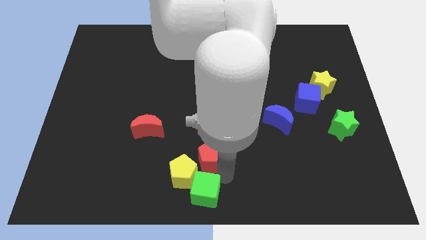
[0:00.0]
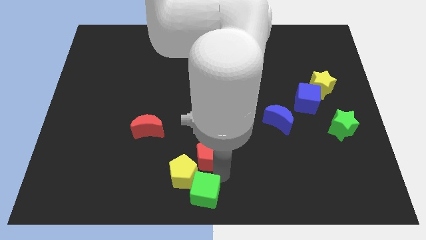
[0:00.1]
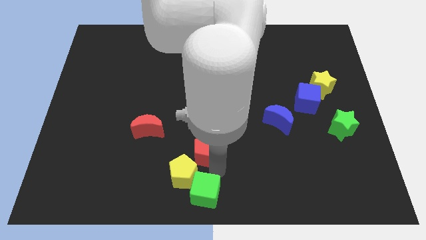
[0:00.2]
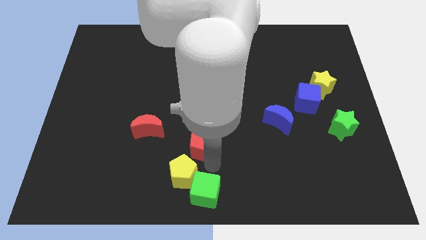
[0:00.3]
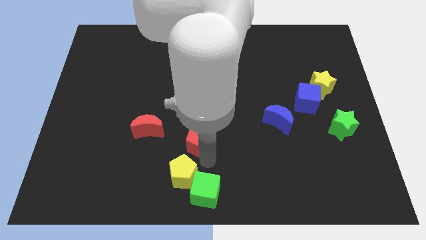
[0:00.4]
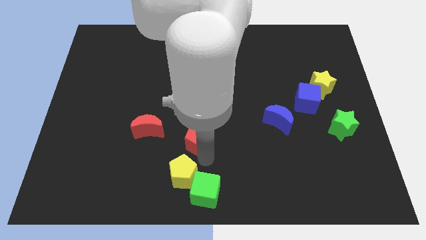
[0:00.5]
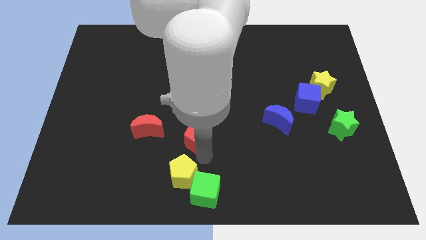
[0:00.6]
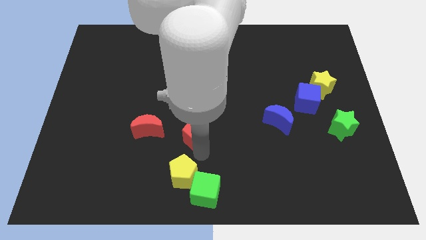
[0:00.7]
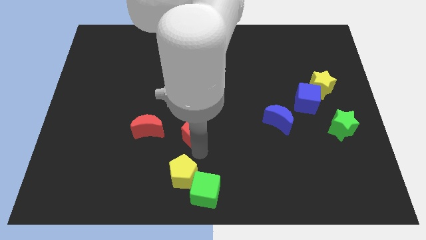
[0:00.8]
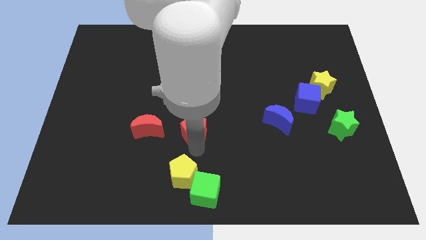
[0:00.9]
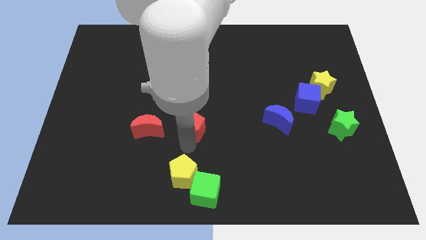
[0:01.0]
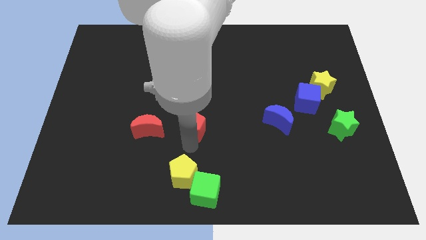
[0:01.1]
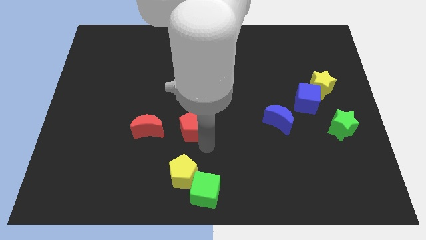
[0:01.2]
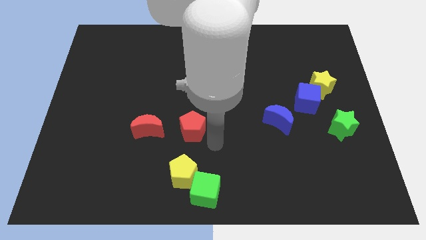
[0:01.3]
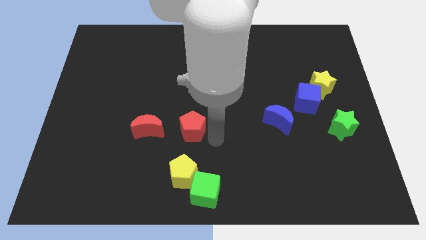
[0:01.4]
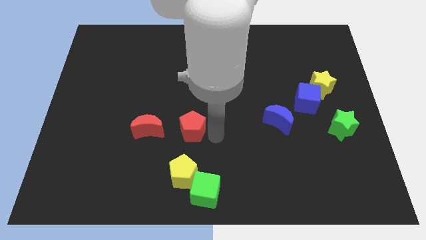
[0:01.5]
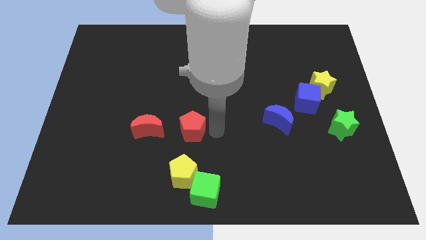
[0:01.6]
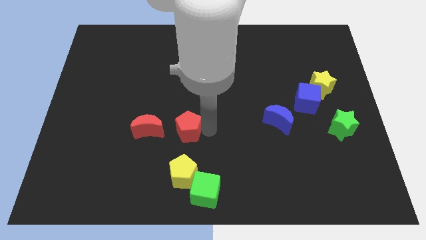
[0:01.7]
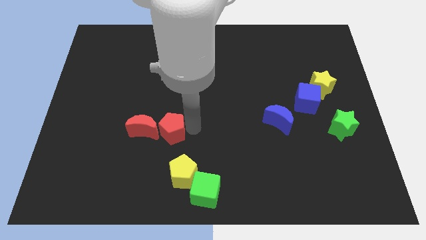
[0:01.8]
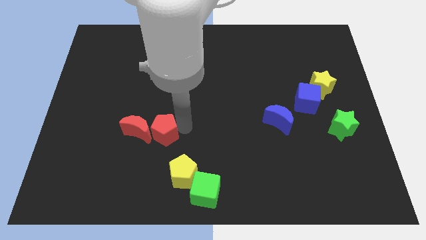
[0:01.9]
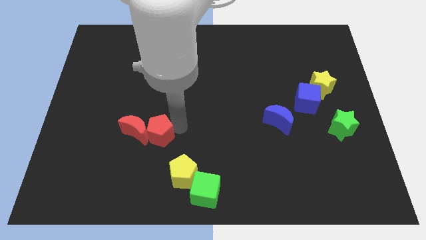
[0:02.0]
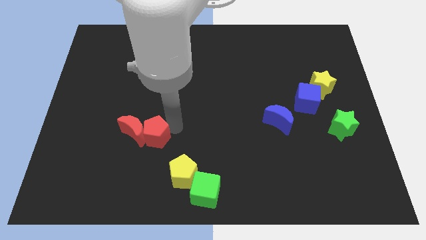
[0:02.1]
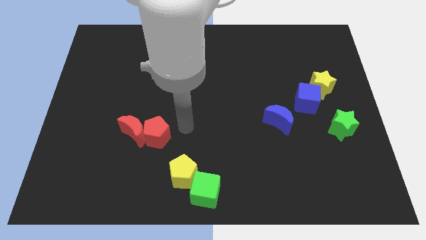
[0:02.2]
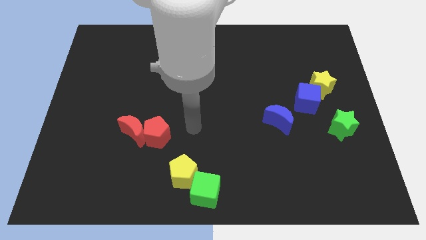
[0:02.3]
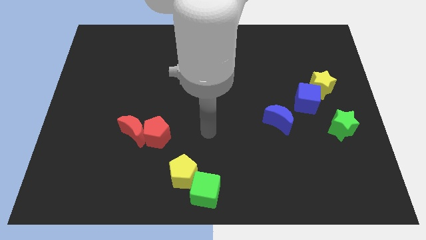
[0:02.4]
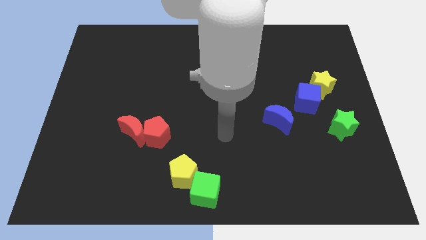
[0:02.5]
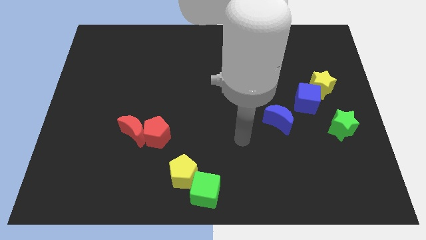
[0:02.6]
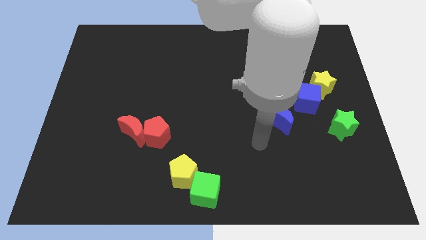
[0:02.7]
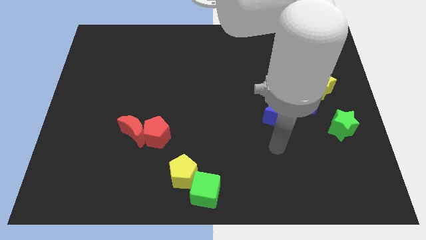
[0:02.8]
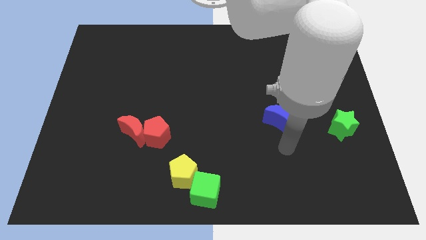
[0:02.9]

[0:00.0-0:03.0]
move the red pentagon to the top left of the yellow pentagon

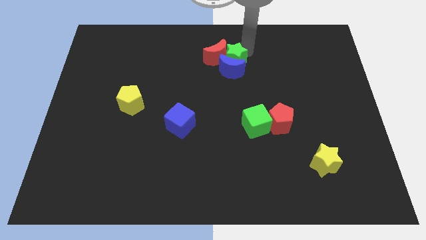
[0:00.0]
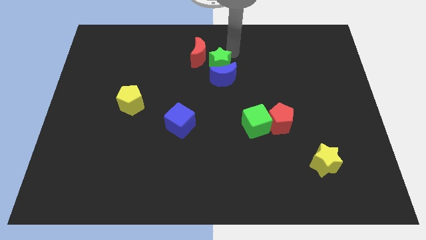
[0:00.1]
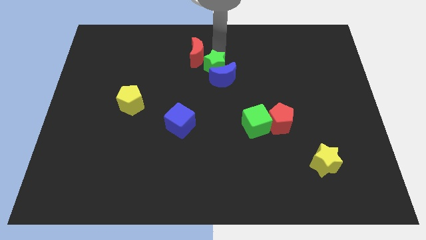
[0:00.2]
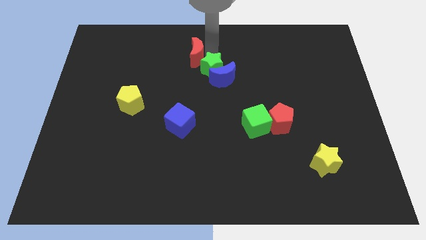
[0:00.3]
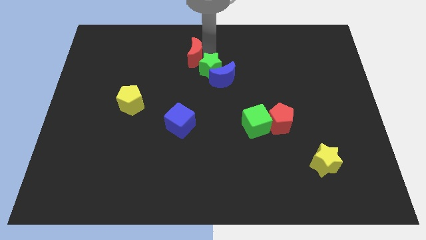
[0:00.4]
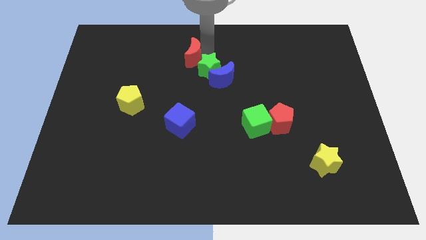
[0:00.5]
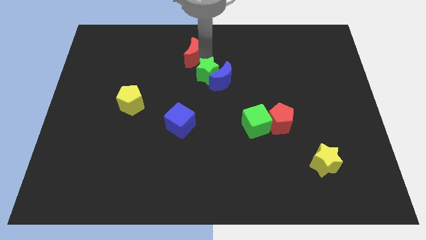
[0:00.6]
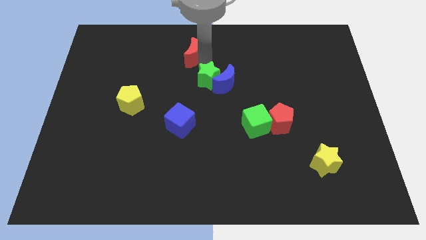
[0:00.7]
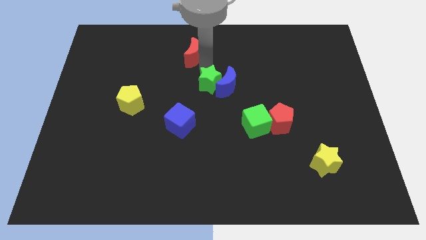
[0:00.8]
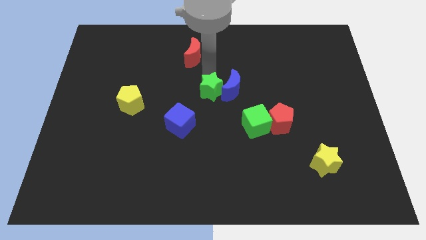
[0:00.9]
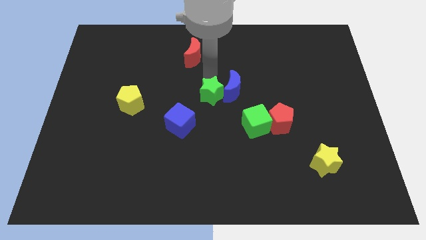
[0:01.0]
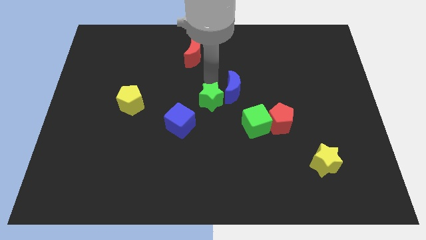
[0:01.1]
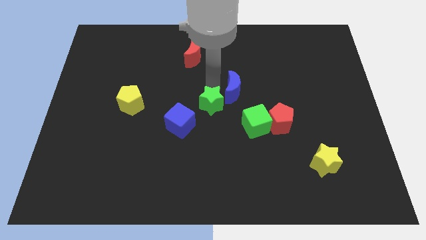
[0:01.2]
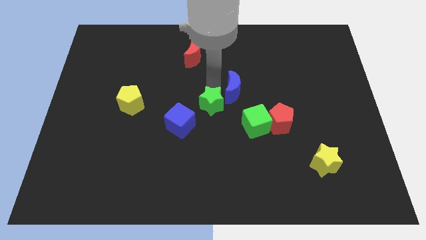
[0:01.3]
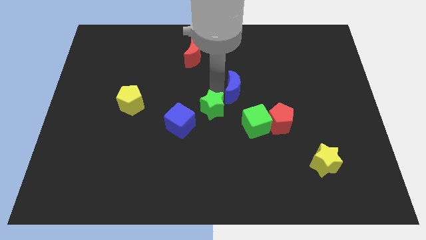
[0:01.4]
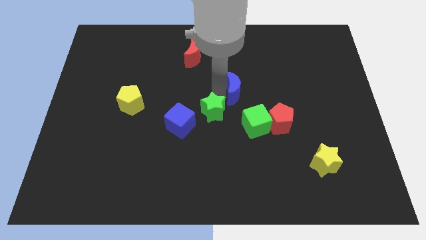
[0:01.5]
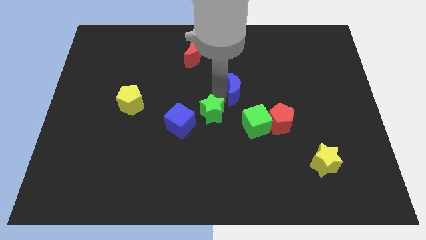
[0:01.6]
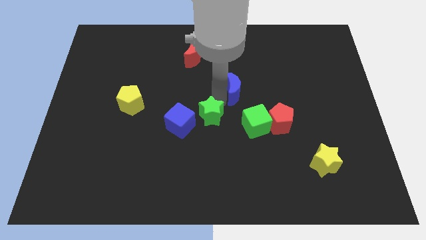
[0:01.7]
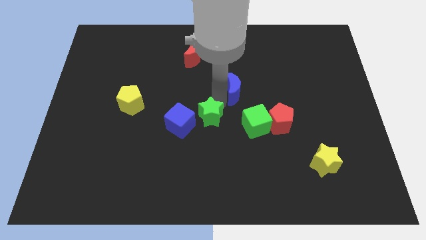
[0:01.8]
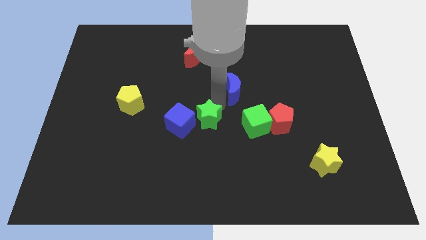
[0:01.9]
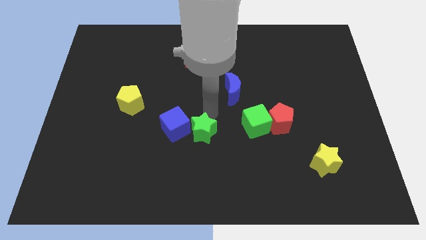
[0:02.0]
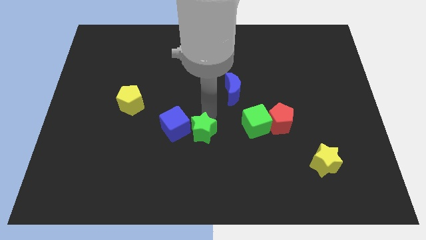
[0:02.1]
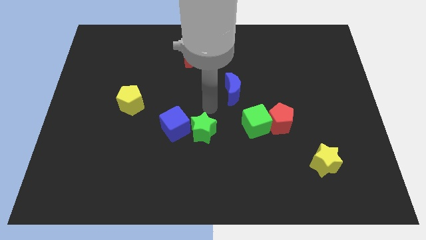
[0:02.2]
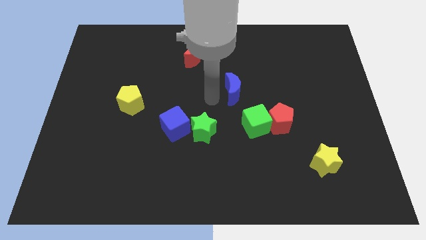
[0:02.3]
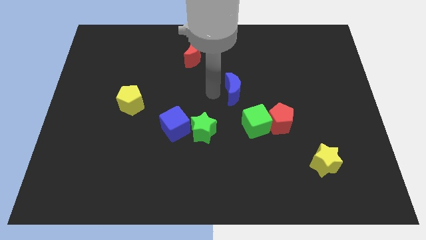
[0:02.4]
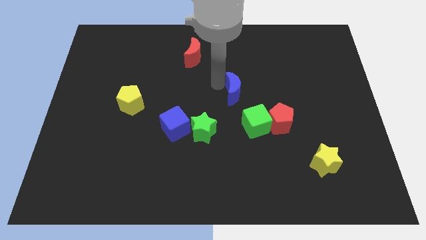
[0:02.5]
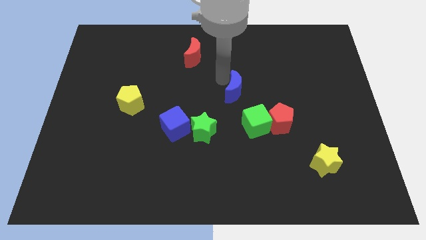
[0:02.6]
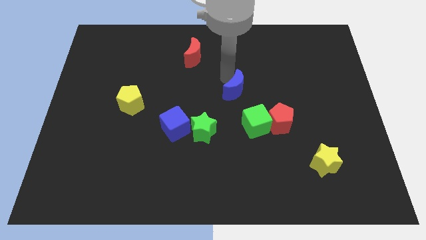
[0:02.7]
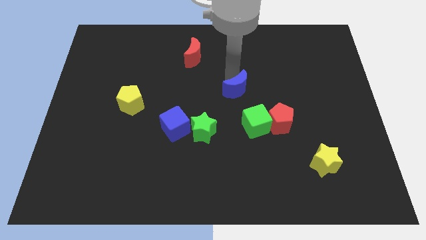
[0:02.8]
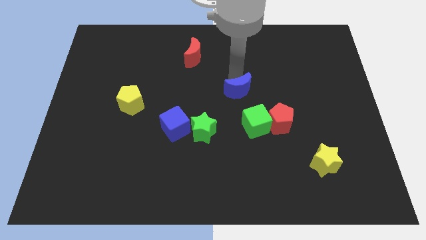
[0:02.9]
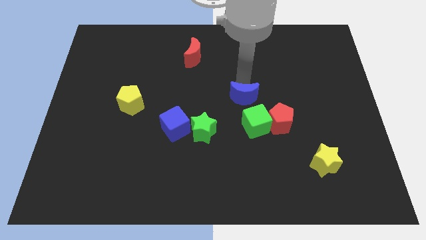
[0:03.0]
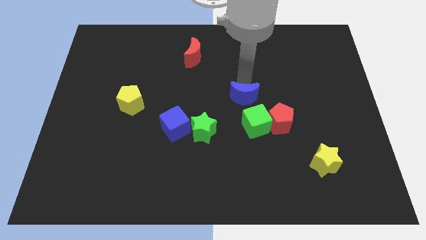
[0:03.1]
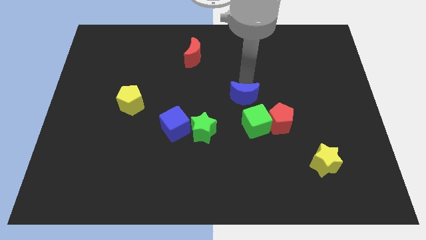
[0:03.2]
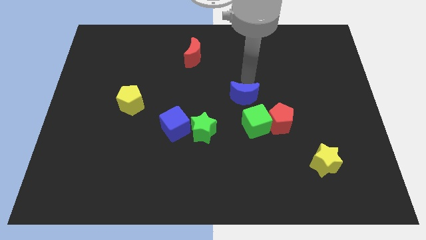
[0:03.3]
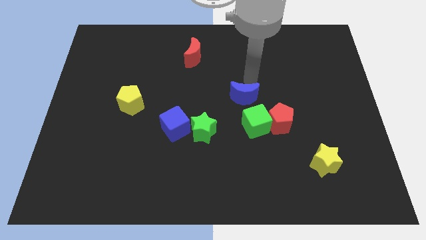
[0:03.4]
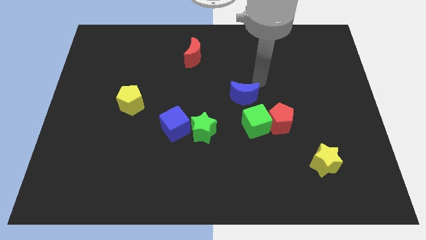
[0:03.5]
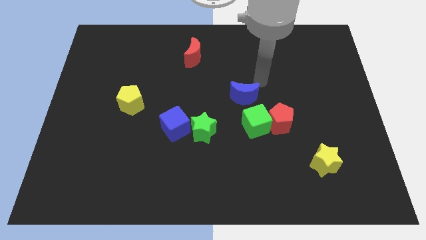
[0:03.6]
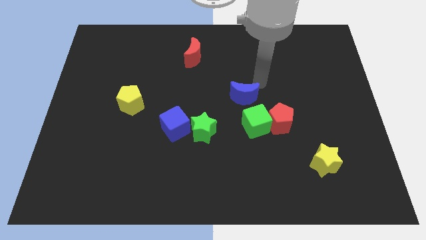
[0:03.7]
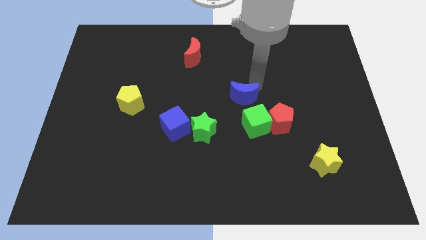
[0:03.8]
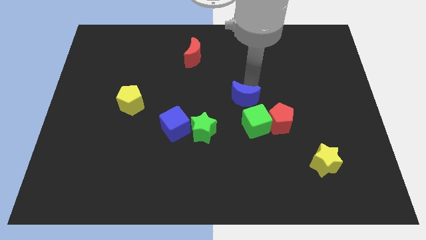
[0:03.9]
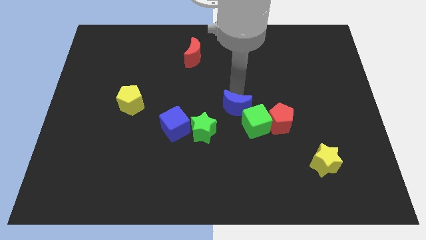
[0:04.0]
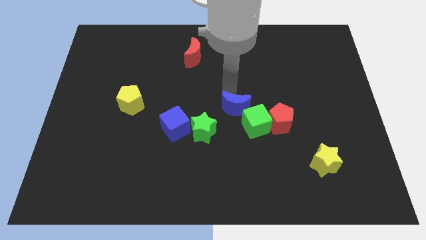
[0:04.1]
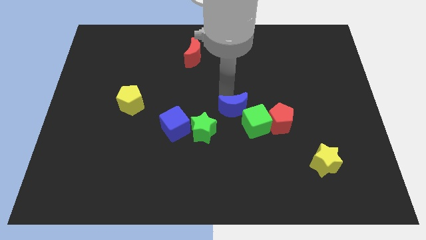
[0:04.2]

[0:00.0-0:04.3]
place the blue moon on the top left of the green cube

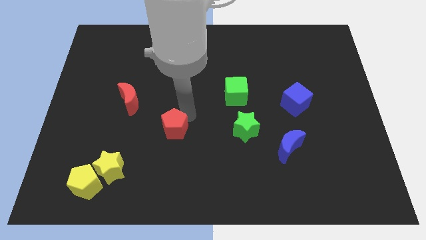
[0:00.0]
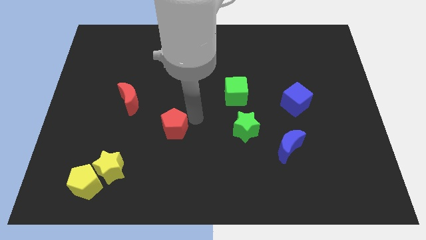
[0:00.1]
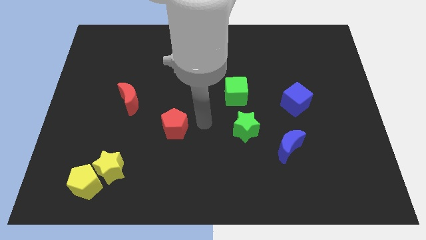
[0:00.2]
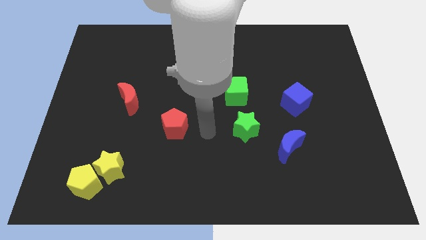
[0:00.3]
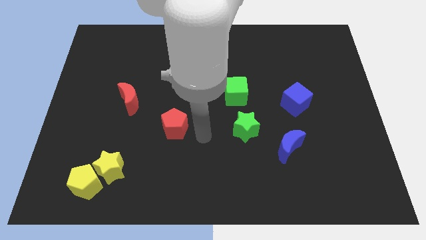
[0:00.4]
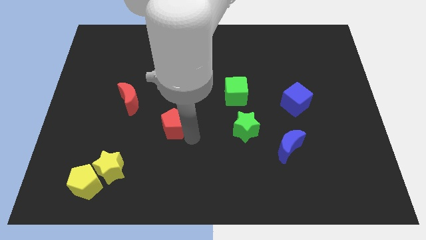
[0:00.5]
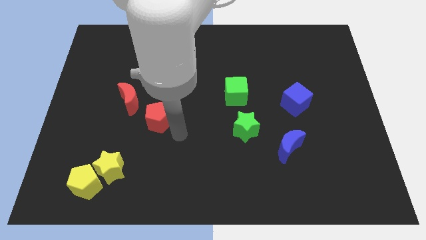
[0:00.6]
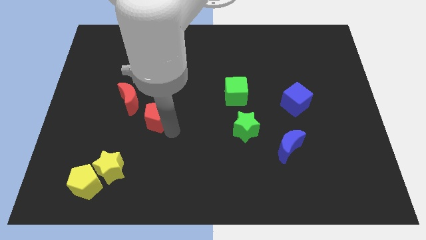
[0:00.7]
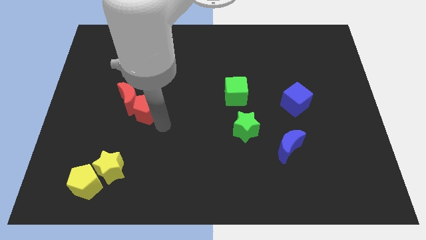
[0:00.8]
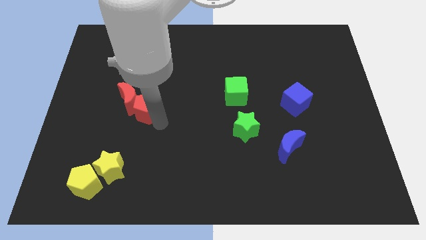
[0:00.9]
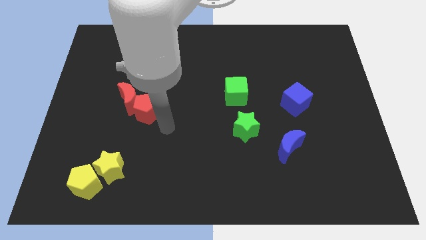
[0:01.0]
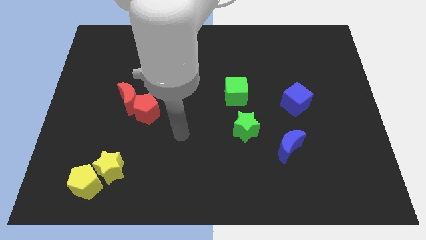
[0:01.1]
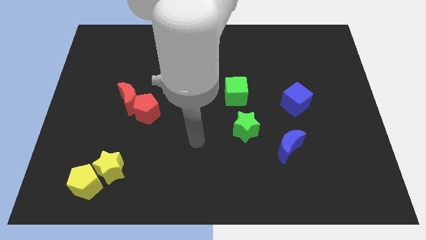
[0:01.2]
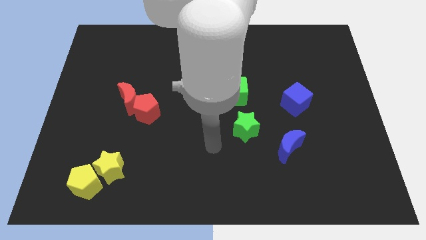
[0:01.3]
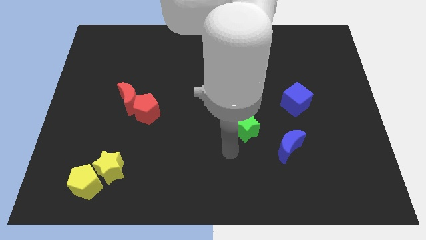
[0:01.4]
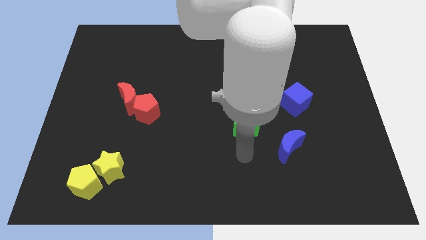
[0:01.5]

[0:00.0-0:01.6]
slightly move the red pentagon towards the red moon

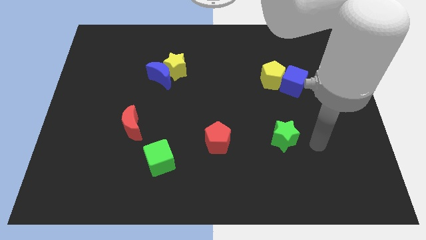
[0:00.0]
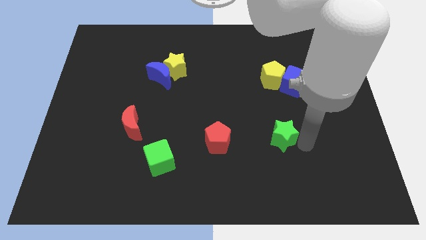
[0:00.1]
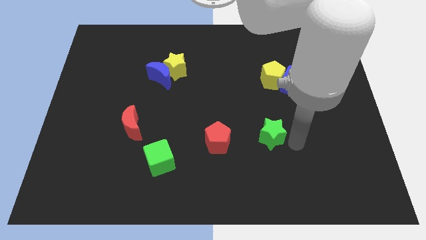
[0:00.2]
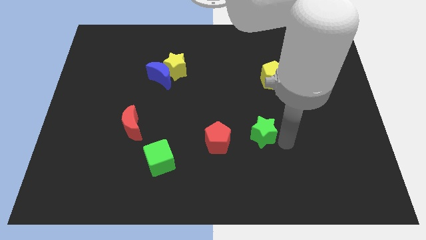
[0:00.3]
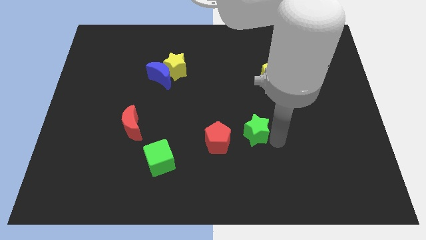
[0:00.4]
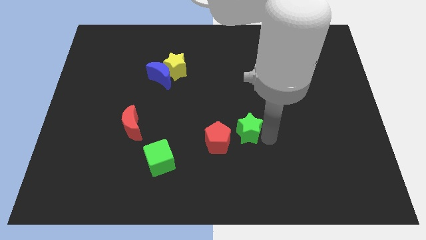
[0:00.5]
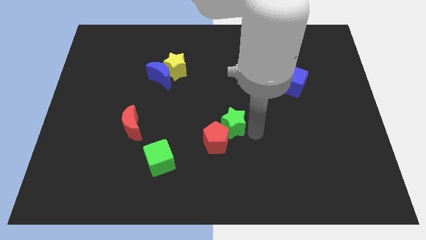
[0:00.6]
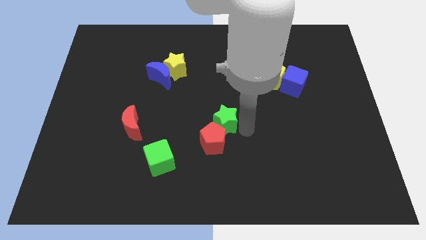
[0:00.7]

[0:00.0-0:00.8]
push the green star close to the red pentagon
